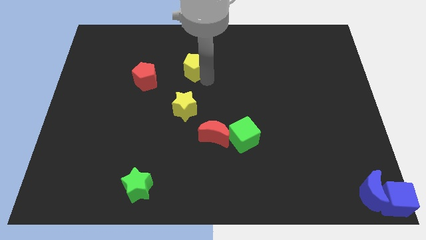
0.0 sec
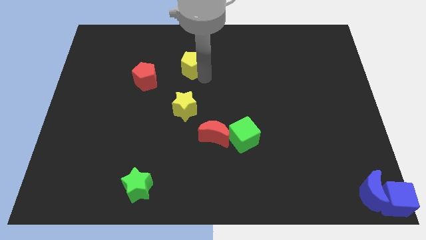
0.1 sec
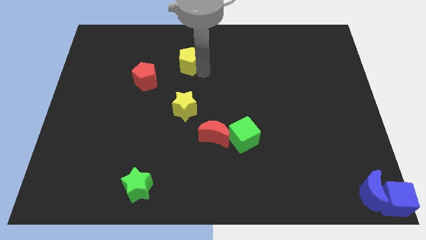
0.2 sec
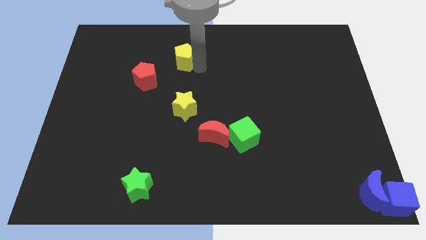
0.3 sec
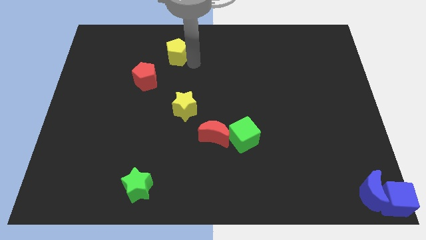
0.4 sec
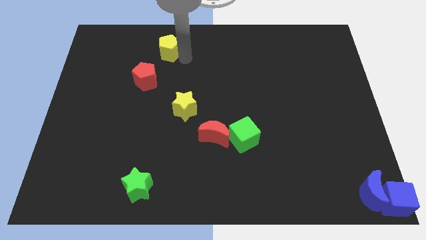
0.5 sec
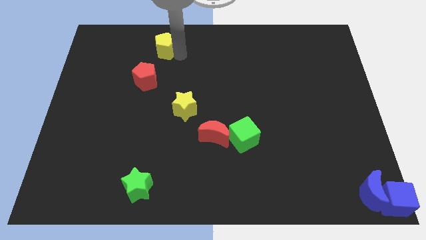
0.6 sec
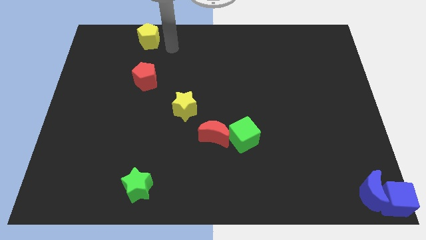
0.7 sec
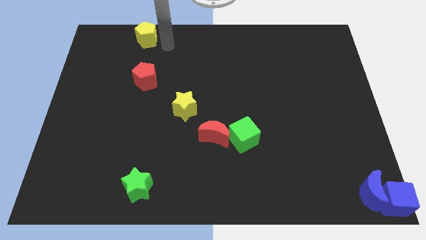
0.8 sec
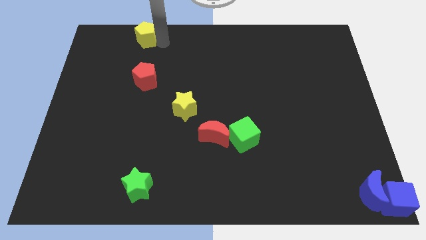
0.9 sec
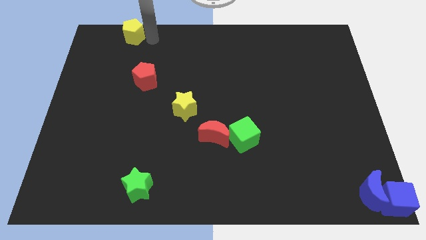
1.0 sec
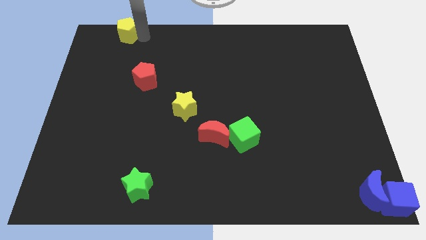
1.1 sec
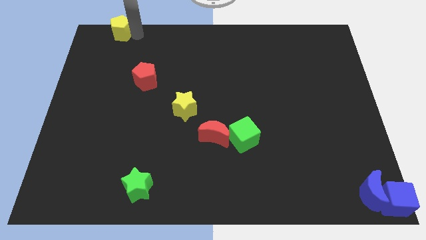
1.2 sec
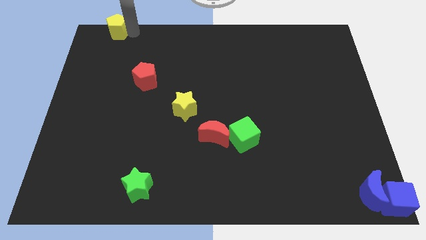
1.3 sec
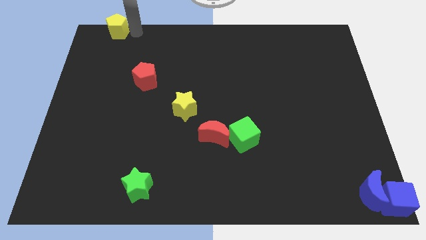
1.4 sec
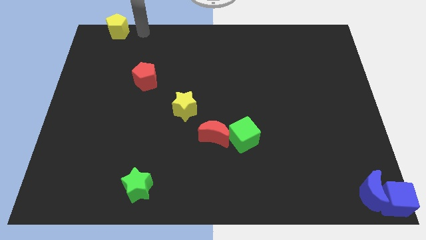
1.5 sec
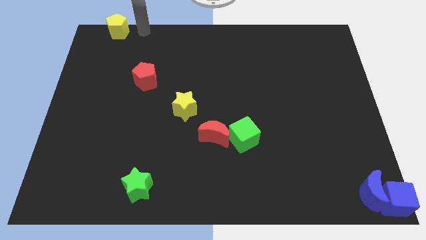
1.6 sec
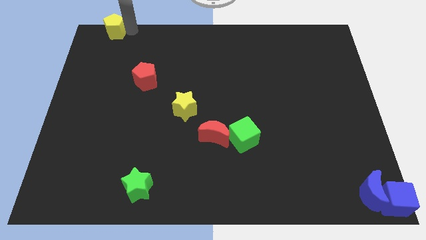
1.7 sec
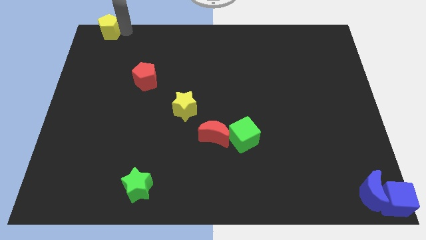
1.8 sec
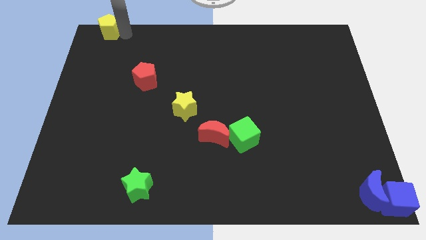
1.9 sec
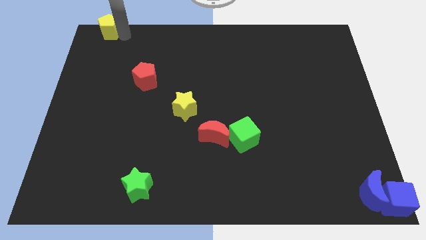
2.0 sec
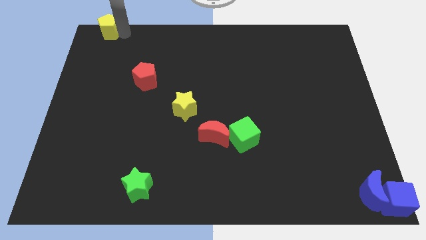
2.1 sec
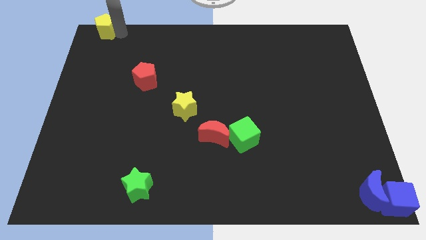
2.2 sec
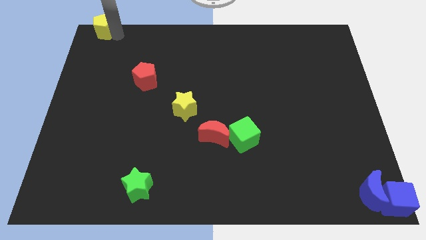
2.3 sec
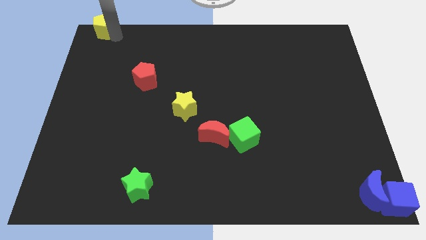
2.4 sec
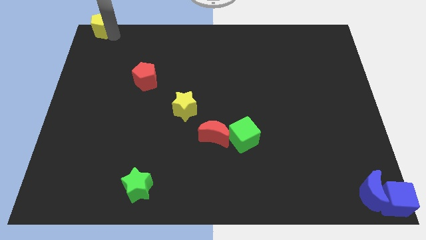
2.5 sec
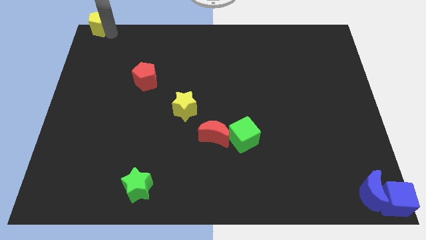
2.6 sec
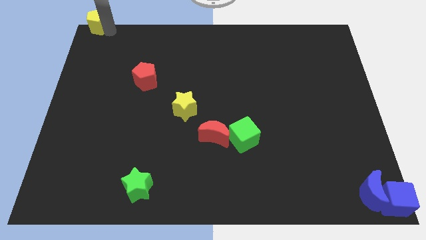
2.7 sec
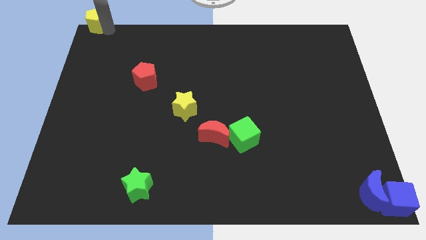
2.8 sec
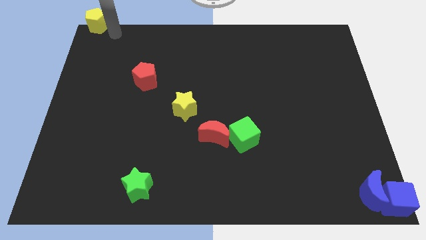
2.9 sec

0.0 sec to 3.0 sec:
push the yellow pentagon to the top left corner of the board

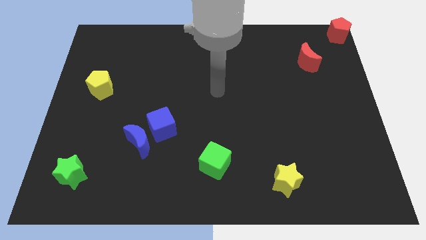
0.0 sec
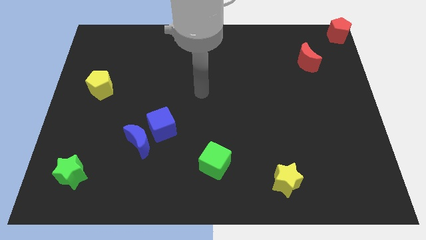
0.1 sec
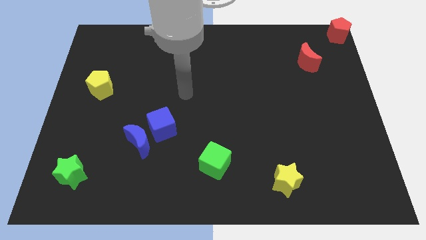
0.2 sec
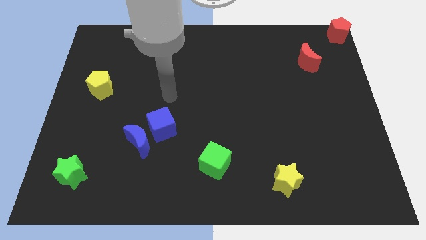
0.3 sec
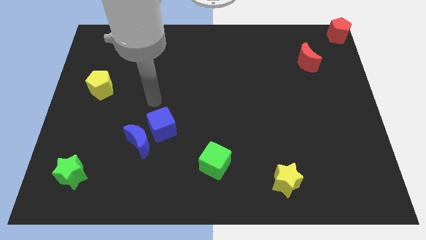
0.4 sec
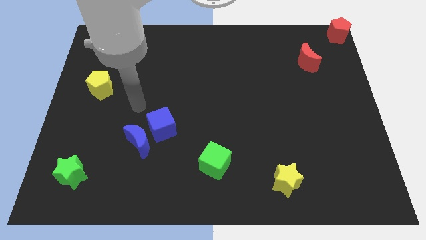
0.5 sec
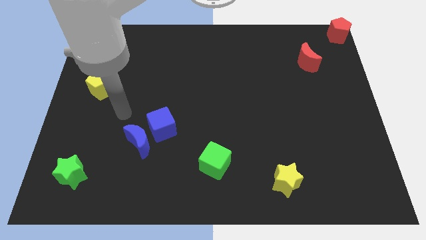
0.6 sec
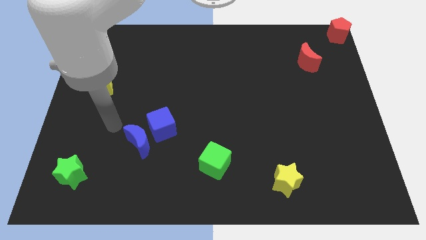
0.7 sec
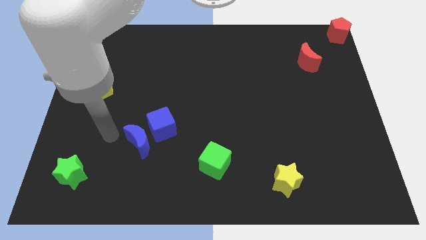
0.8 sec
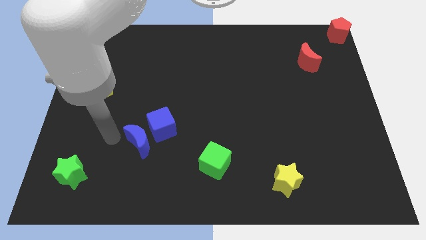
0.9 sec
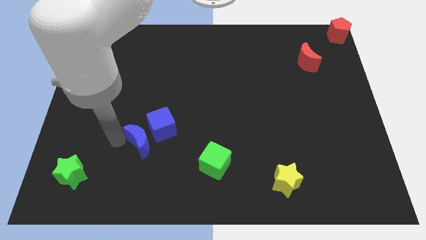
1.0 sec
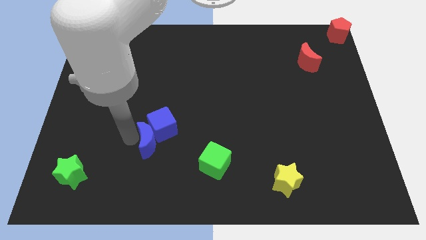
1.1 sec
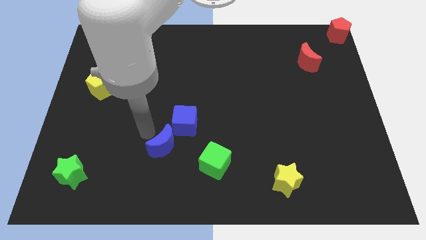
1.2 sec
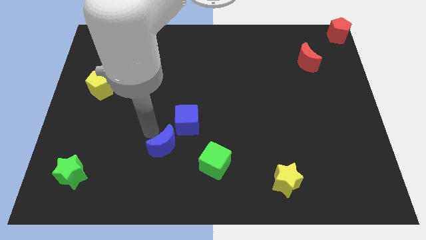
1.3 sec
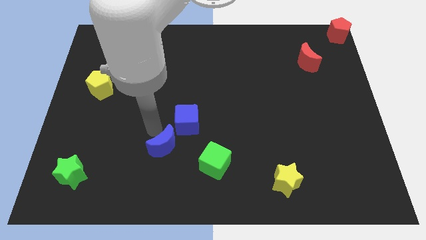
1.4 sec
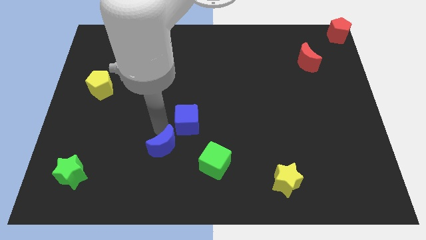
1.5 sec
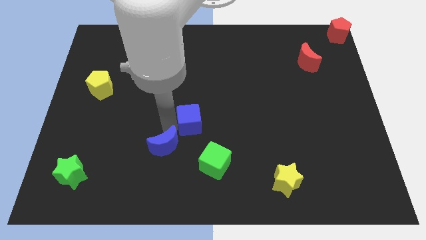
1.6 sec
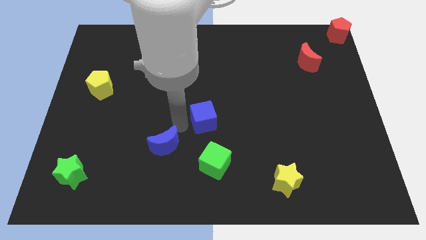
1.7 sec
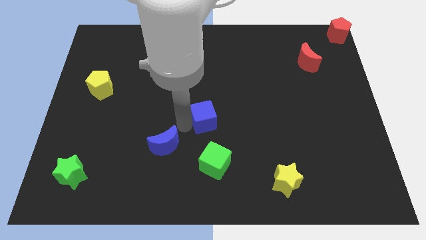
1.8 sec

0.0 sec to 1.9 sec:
move the blue cube slightly to the right

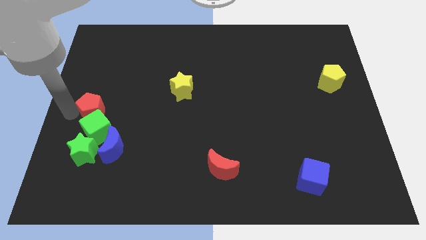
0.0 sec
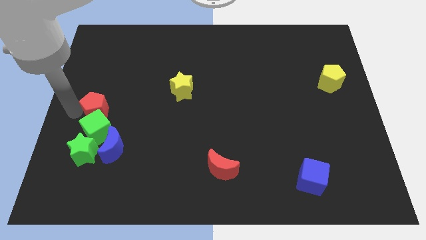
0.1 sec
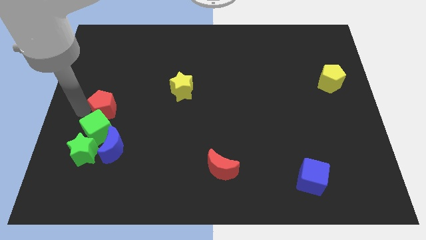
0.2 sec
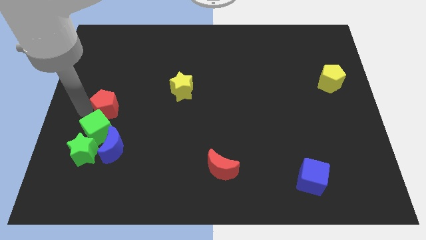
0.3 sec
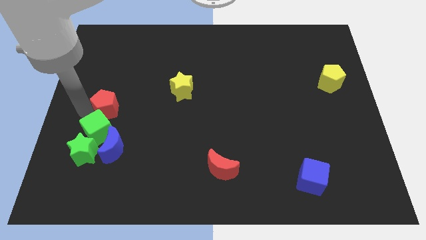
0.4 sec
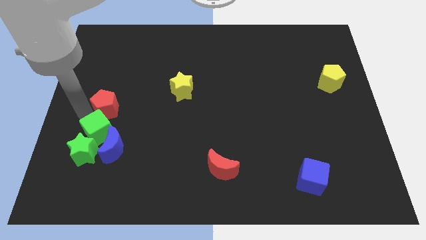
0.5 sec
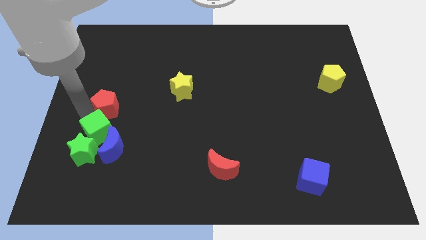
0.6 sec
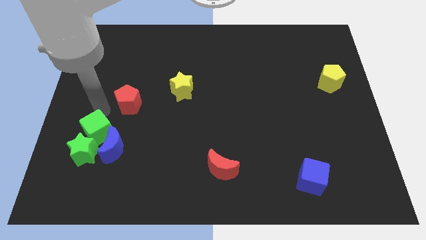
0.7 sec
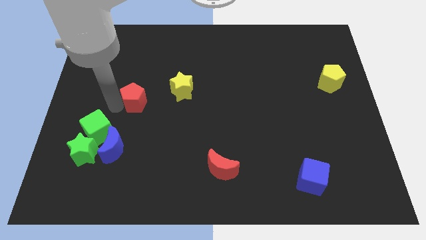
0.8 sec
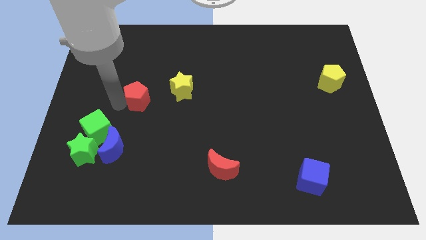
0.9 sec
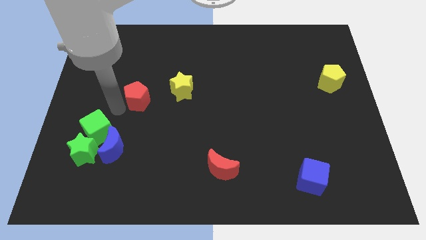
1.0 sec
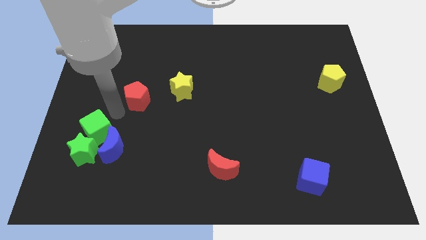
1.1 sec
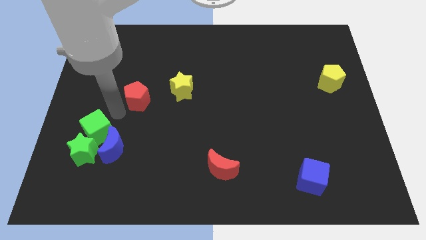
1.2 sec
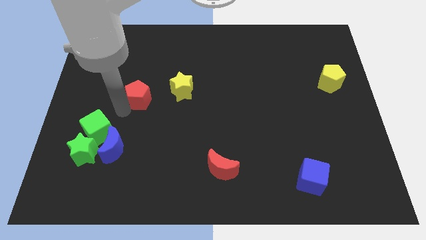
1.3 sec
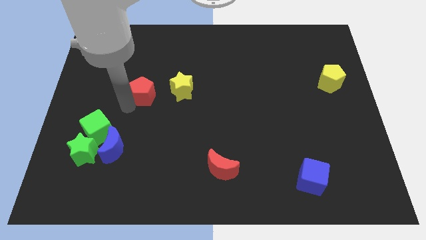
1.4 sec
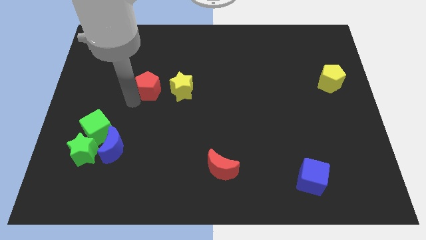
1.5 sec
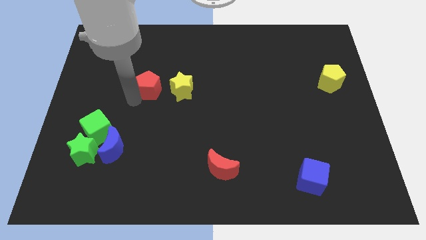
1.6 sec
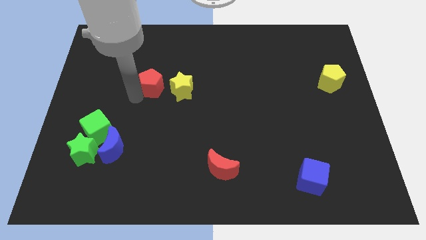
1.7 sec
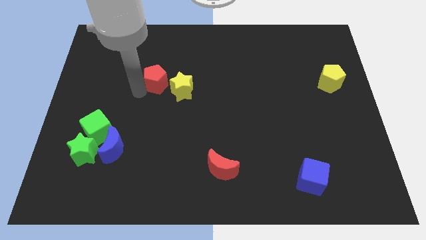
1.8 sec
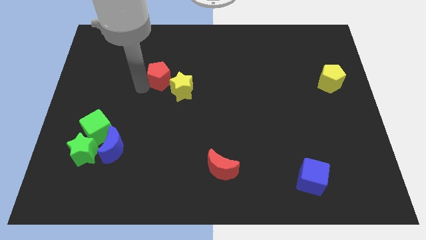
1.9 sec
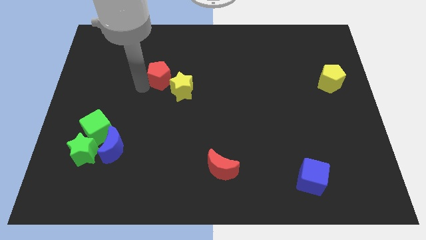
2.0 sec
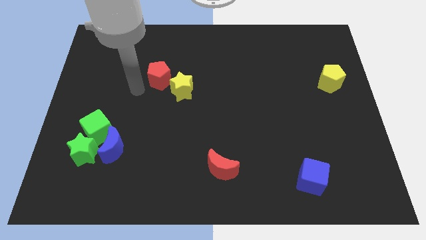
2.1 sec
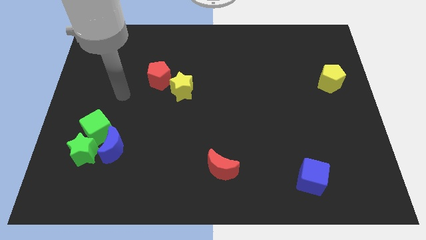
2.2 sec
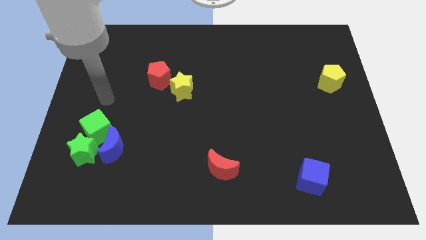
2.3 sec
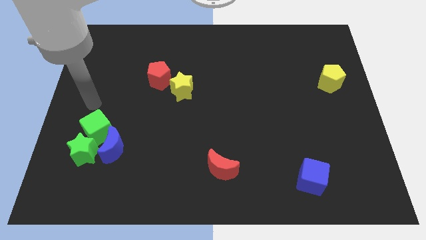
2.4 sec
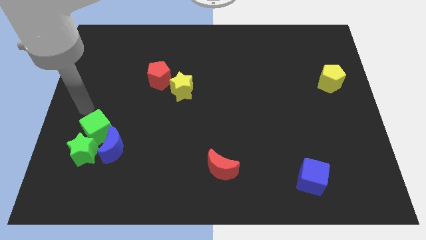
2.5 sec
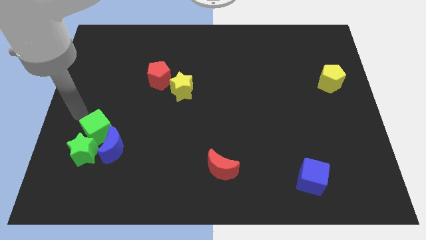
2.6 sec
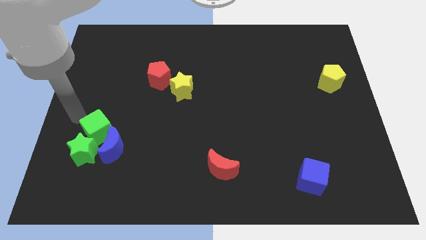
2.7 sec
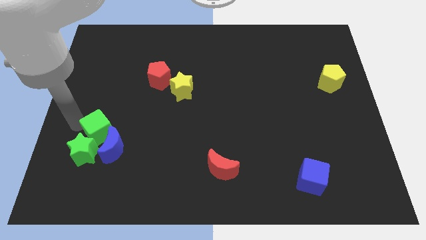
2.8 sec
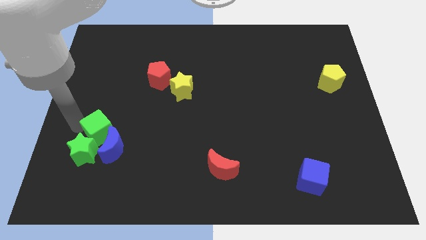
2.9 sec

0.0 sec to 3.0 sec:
push the red pentagon at the top left of the yellow star

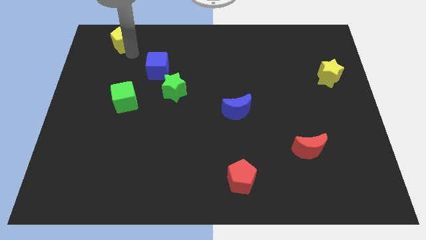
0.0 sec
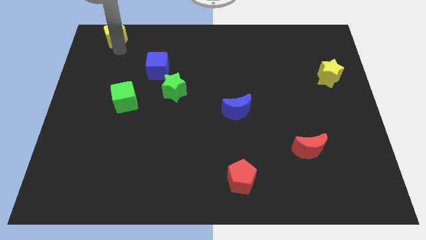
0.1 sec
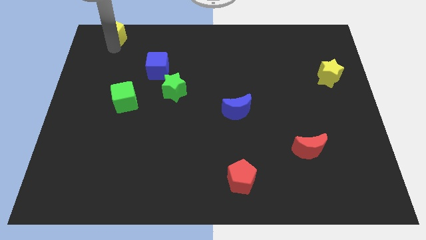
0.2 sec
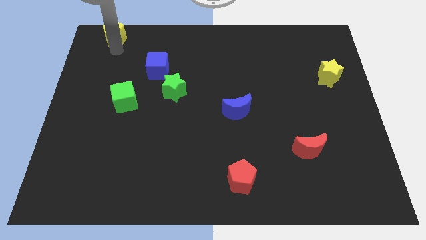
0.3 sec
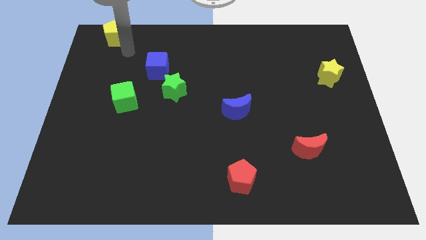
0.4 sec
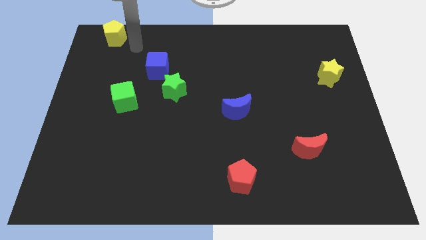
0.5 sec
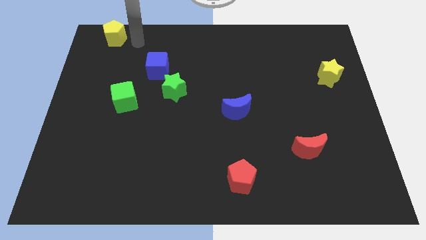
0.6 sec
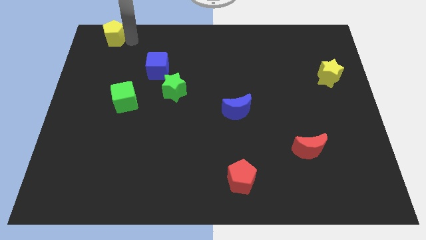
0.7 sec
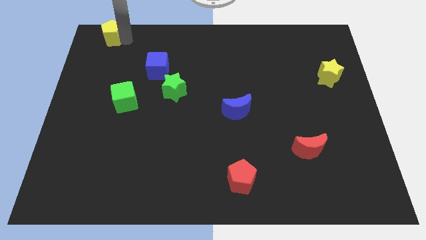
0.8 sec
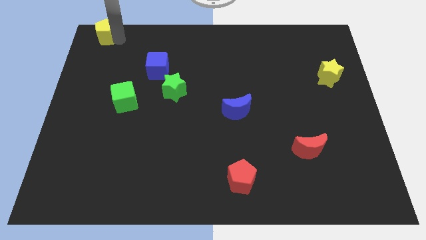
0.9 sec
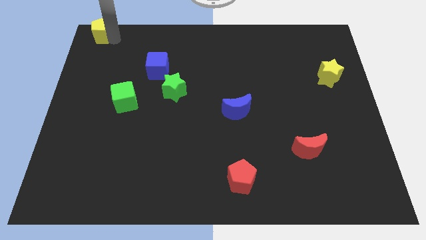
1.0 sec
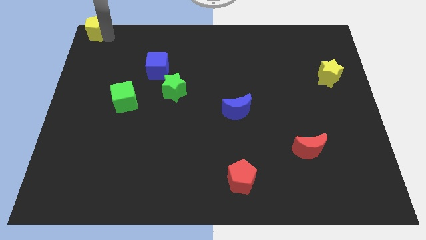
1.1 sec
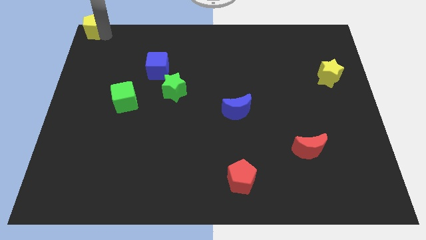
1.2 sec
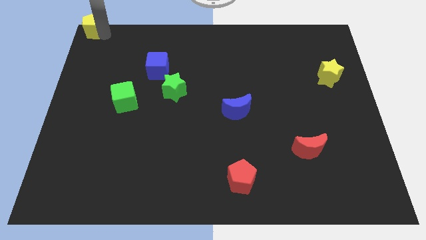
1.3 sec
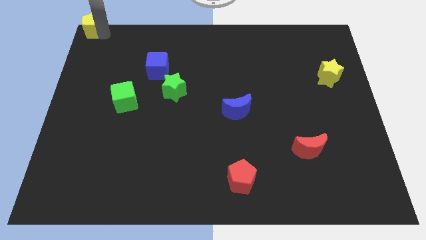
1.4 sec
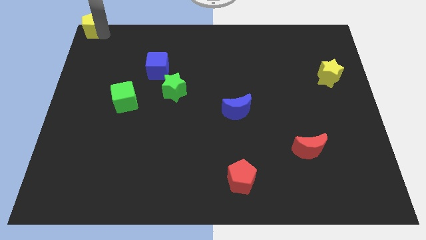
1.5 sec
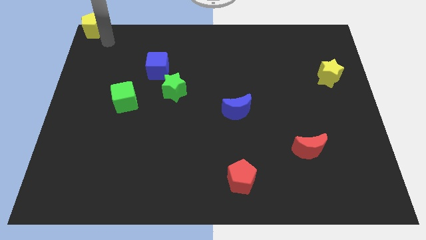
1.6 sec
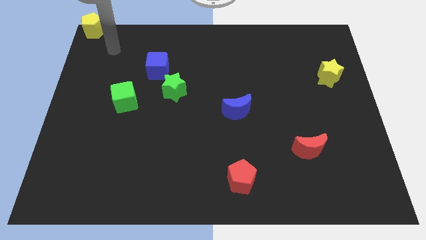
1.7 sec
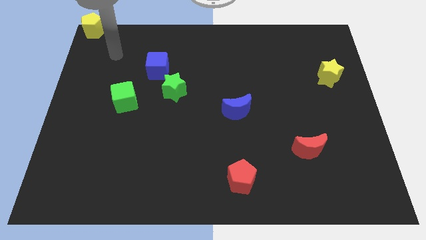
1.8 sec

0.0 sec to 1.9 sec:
place the yellow pentagon at the top left corner of the board
